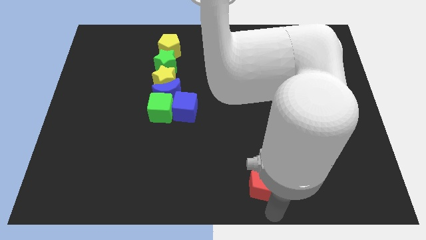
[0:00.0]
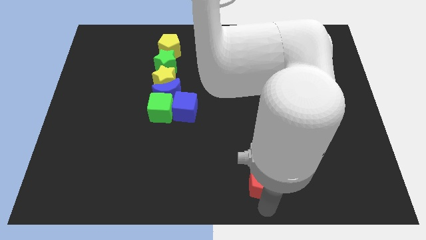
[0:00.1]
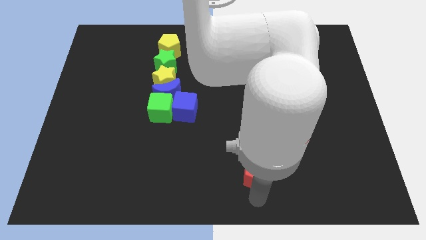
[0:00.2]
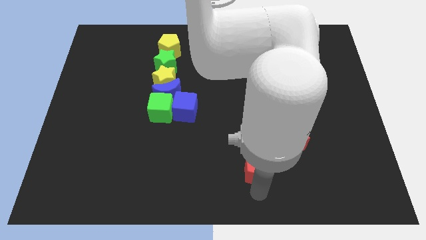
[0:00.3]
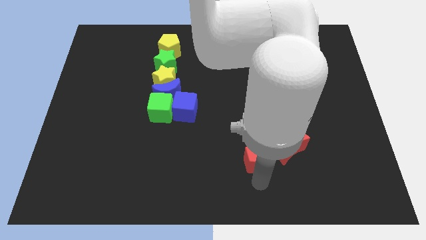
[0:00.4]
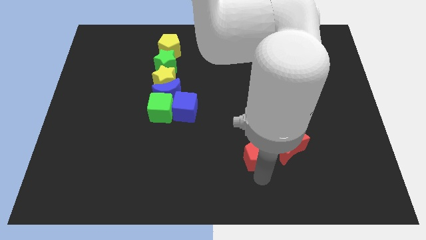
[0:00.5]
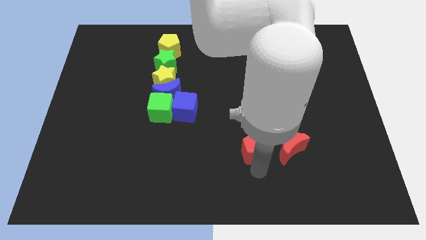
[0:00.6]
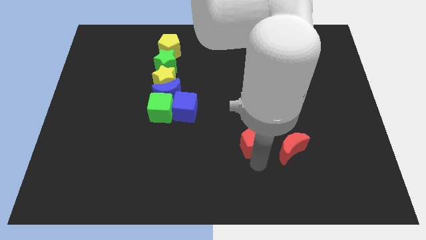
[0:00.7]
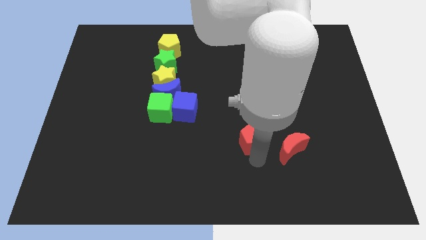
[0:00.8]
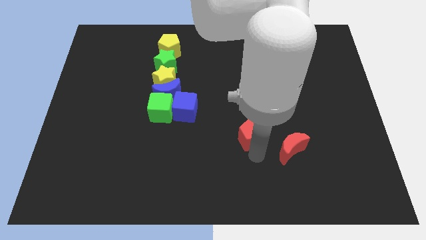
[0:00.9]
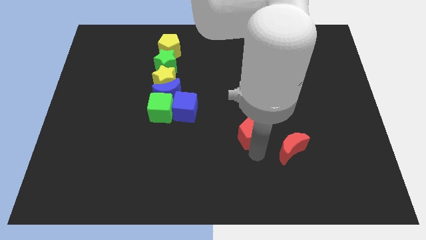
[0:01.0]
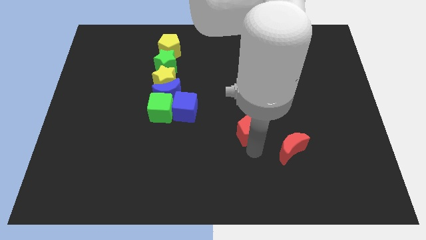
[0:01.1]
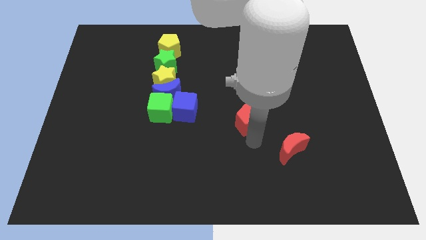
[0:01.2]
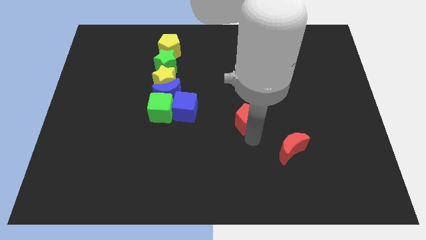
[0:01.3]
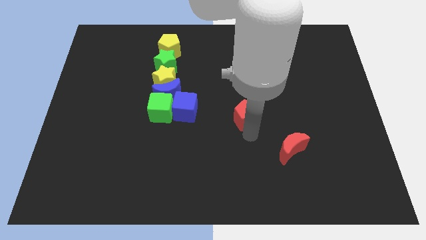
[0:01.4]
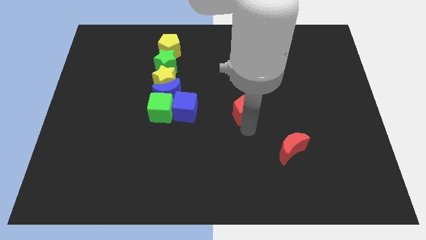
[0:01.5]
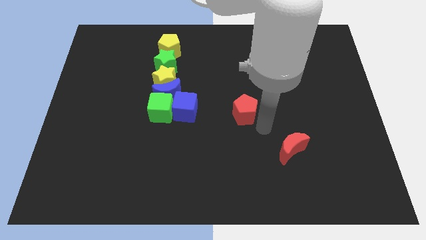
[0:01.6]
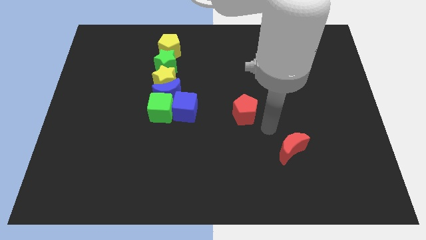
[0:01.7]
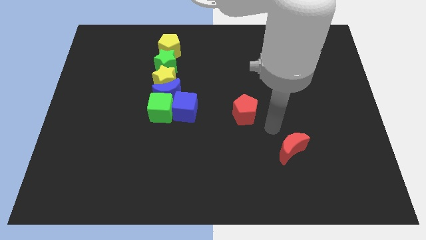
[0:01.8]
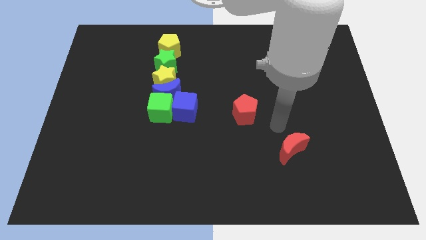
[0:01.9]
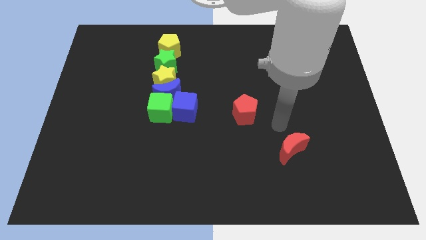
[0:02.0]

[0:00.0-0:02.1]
place red pentagon diagonal to right of blue cube

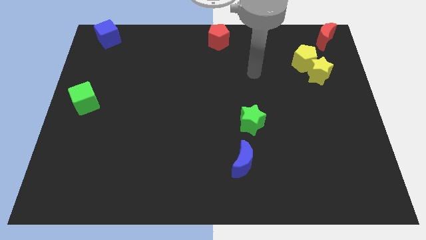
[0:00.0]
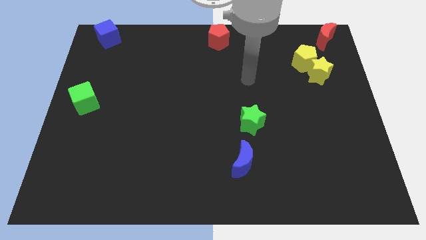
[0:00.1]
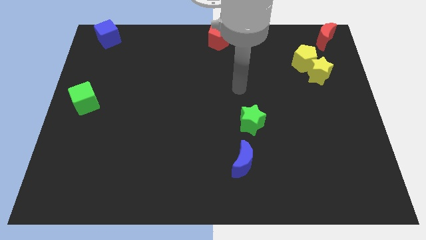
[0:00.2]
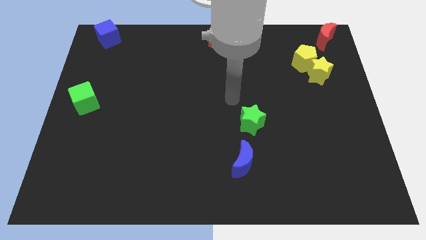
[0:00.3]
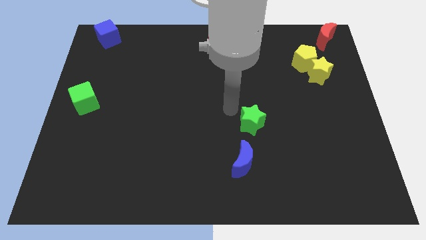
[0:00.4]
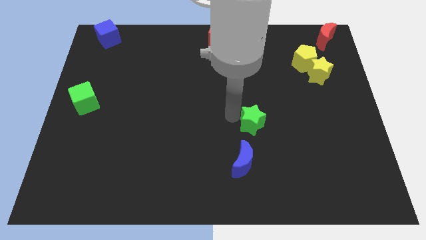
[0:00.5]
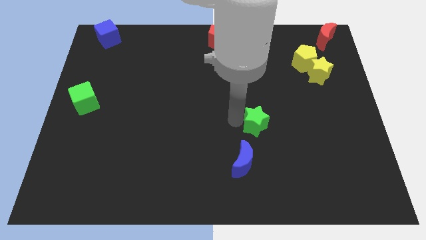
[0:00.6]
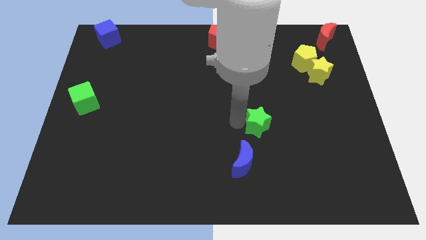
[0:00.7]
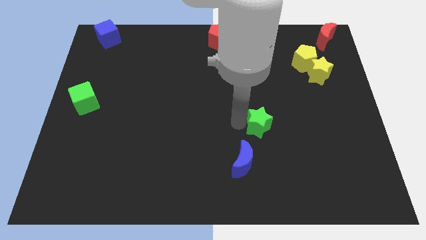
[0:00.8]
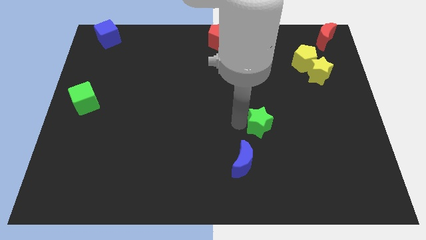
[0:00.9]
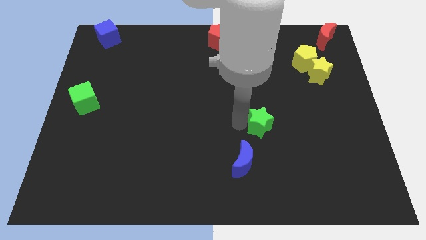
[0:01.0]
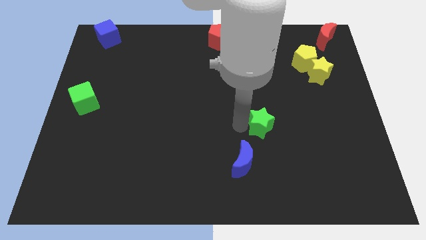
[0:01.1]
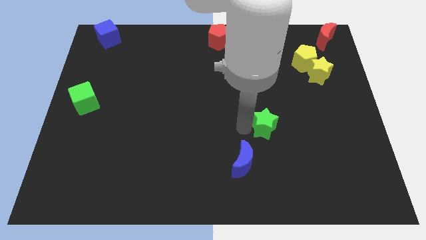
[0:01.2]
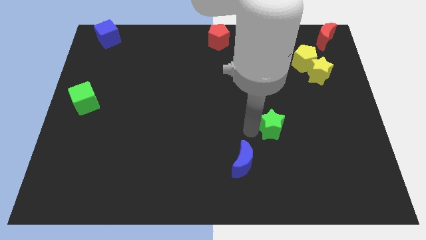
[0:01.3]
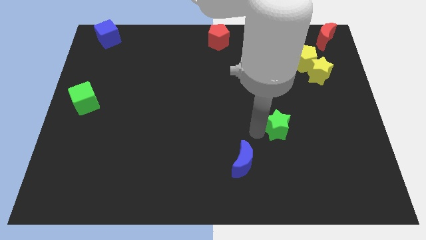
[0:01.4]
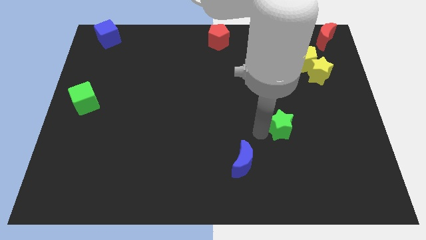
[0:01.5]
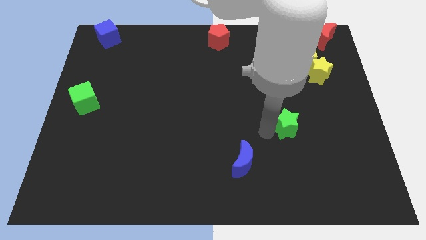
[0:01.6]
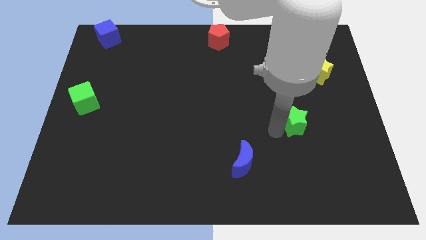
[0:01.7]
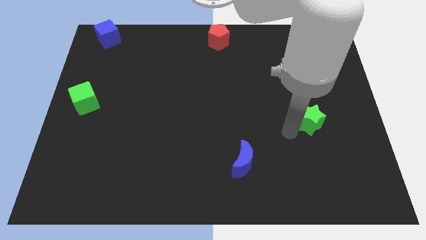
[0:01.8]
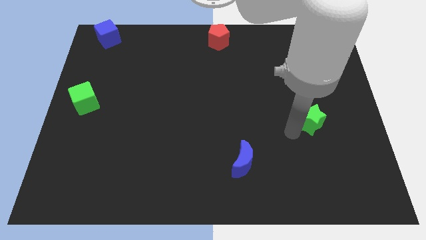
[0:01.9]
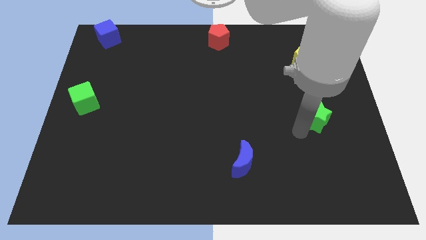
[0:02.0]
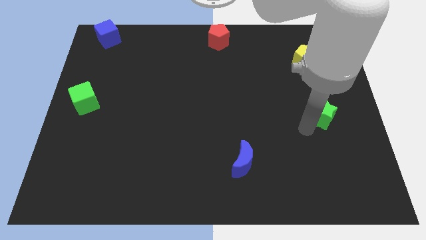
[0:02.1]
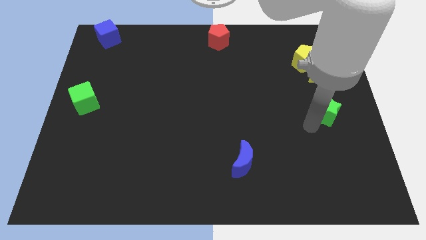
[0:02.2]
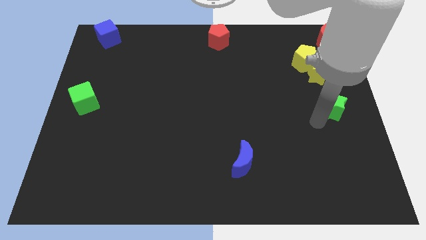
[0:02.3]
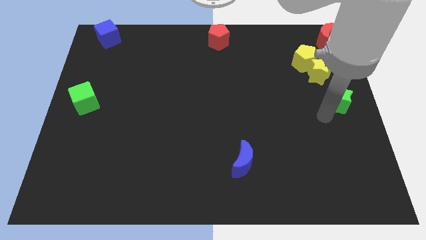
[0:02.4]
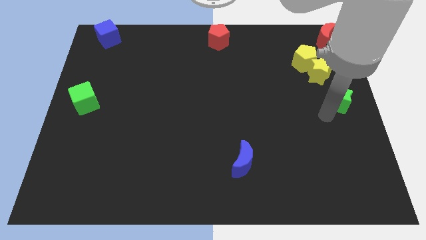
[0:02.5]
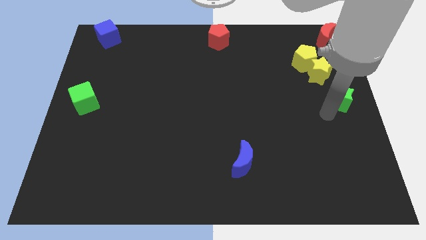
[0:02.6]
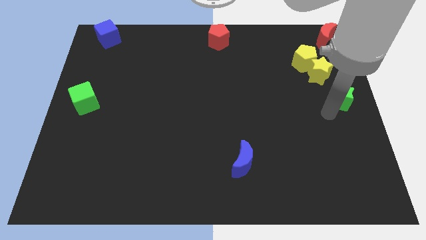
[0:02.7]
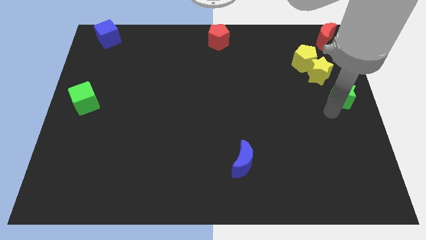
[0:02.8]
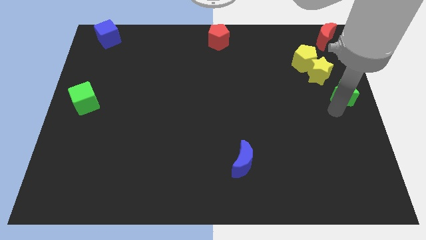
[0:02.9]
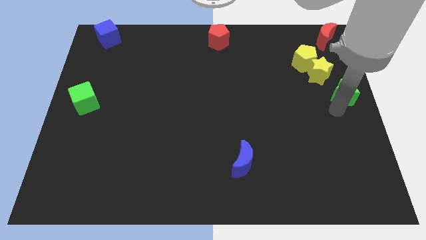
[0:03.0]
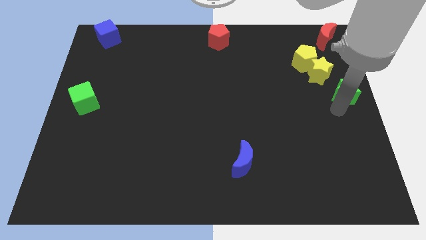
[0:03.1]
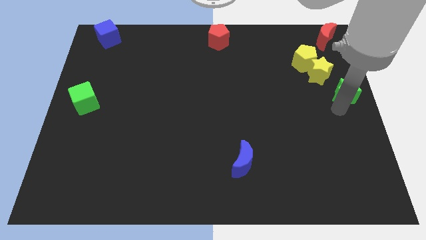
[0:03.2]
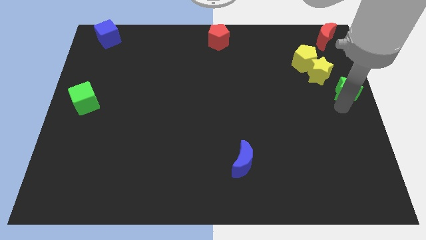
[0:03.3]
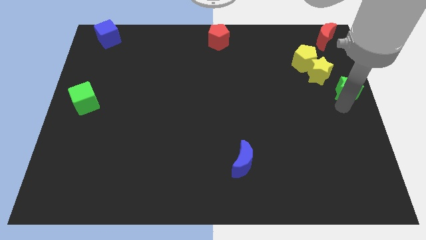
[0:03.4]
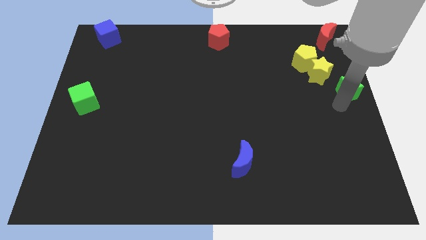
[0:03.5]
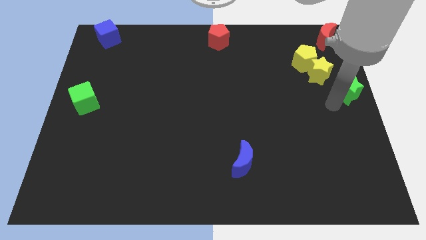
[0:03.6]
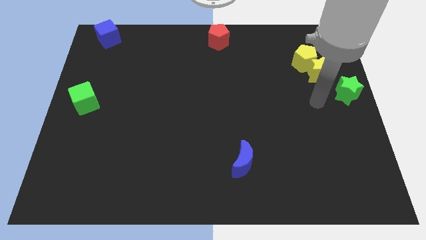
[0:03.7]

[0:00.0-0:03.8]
push the green star to the bottom side of the yellow star to form a diagonal line

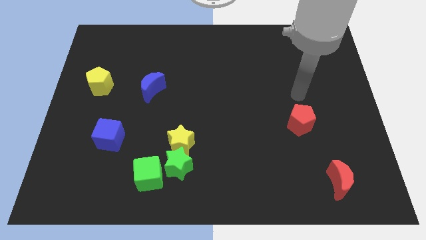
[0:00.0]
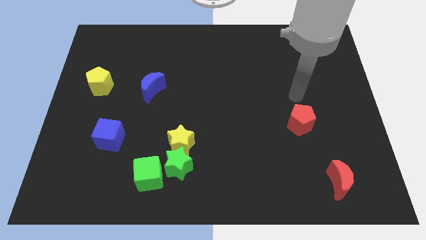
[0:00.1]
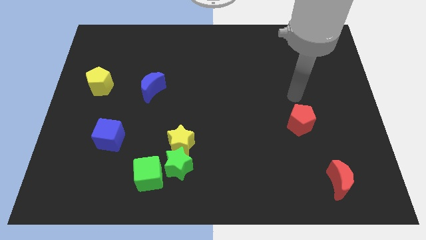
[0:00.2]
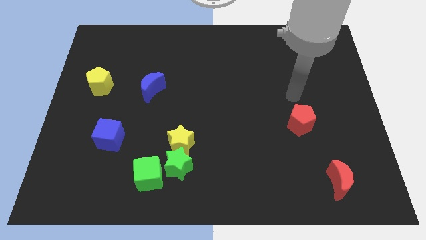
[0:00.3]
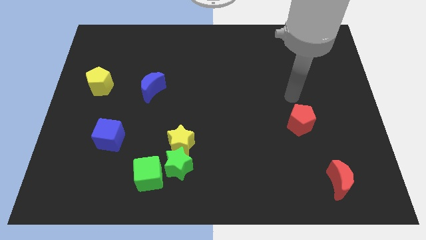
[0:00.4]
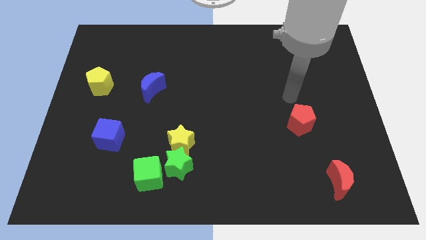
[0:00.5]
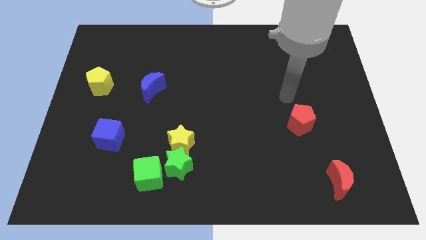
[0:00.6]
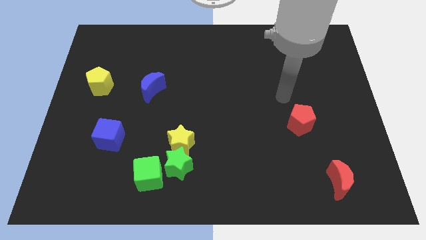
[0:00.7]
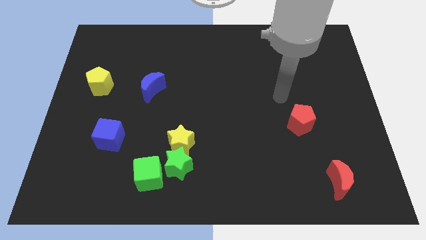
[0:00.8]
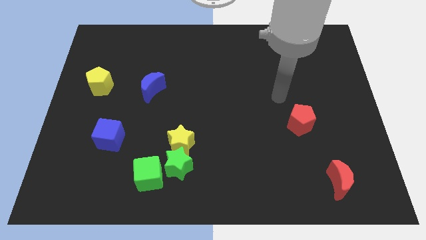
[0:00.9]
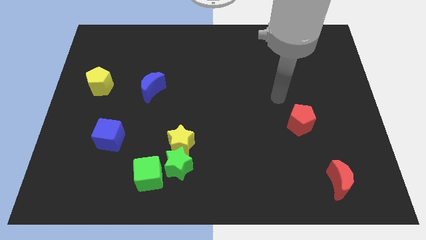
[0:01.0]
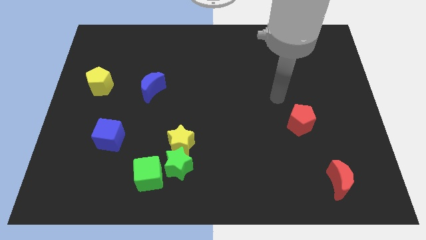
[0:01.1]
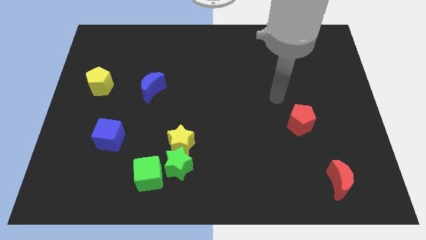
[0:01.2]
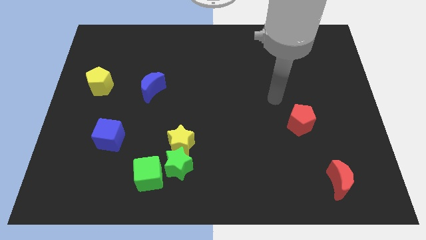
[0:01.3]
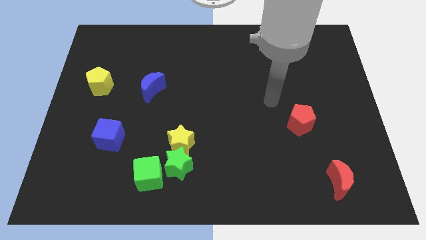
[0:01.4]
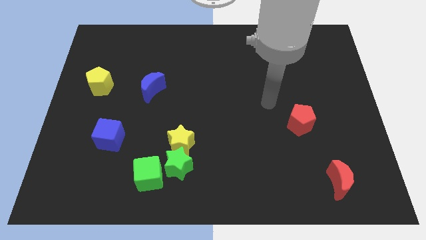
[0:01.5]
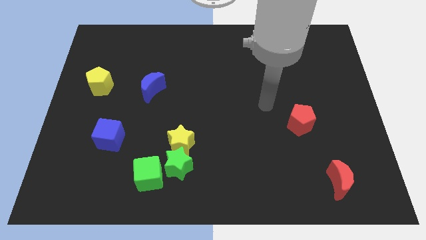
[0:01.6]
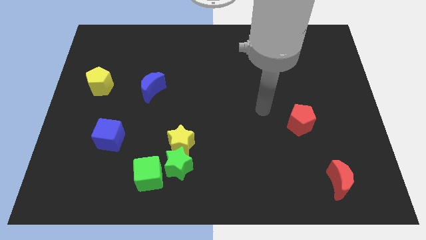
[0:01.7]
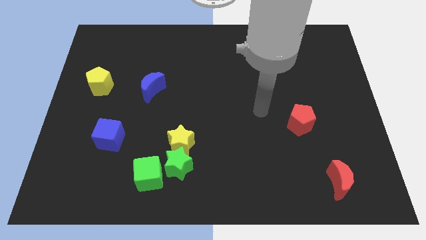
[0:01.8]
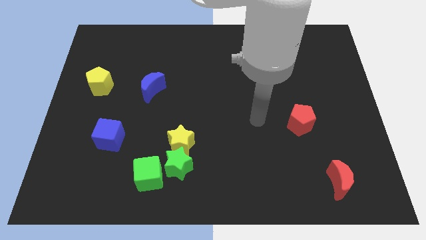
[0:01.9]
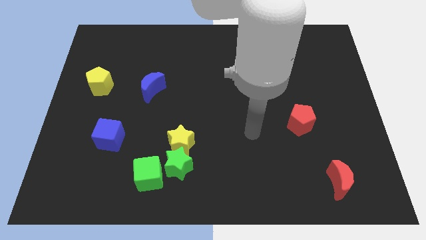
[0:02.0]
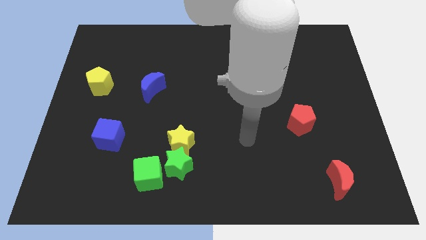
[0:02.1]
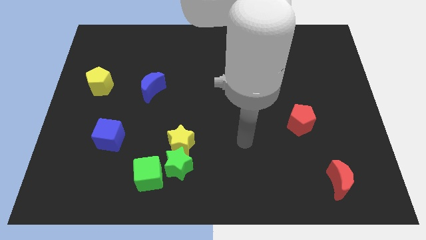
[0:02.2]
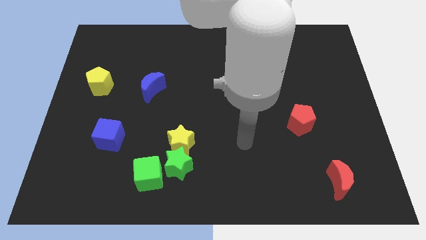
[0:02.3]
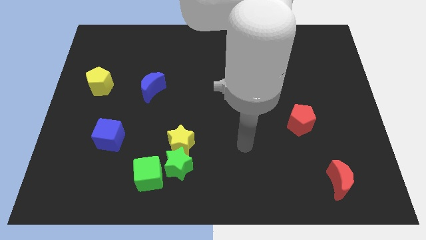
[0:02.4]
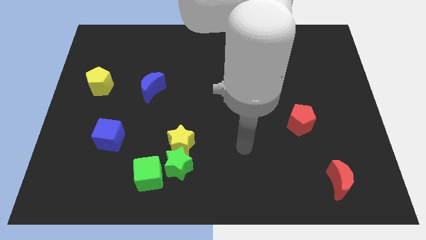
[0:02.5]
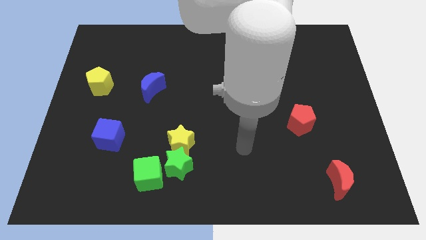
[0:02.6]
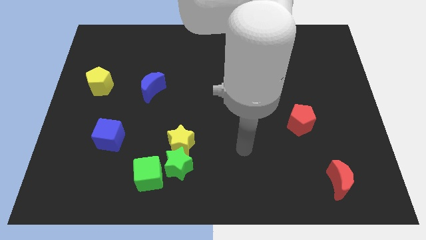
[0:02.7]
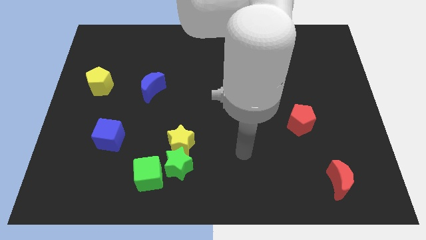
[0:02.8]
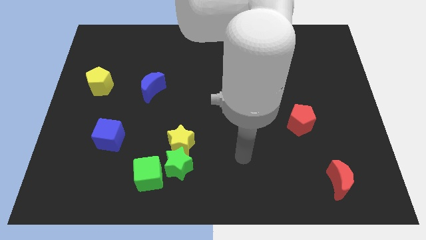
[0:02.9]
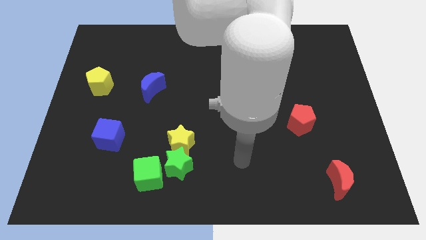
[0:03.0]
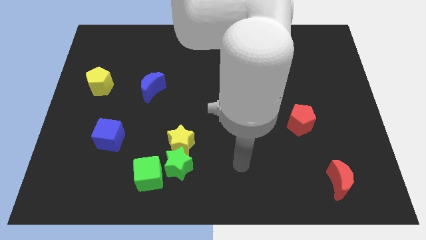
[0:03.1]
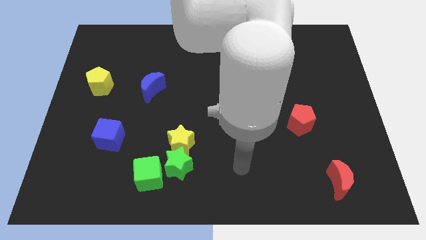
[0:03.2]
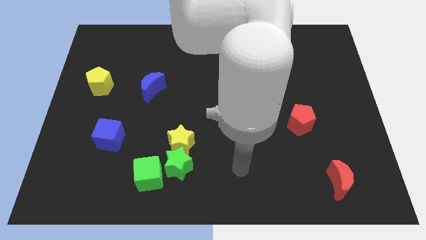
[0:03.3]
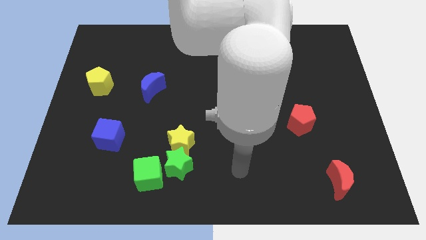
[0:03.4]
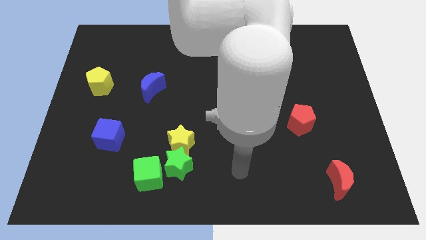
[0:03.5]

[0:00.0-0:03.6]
move the arm to the right side of the green star
